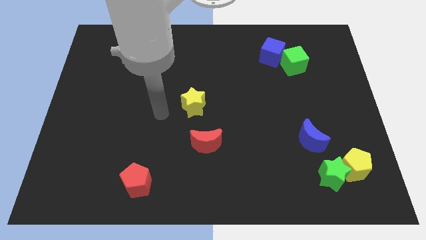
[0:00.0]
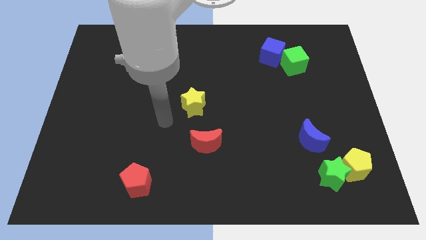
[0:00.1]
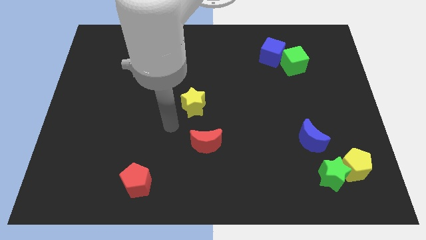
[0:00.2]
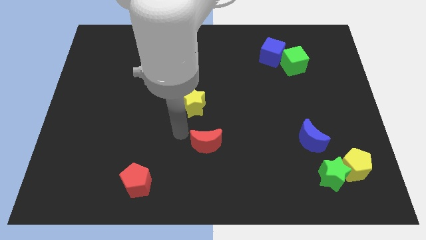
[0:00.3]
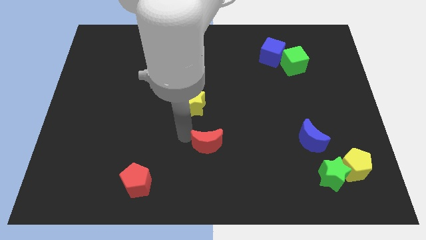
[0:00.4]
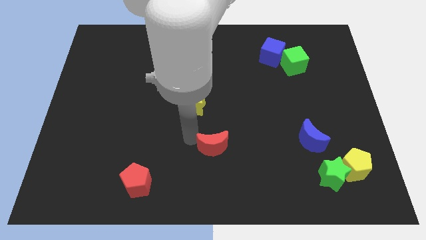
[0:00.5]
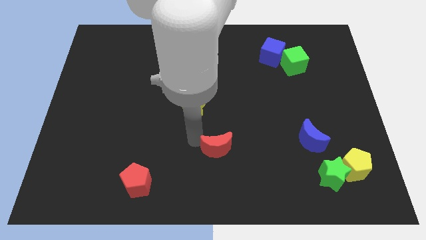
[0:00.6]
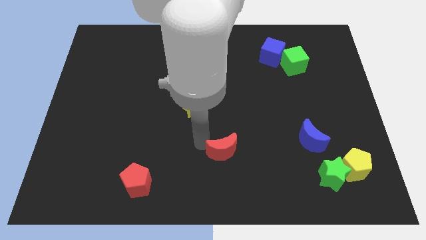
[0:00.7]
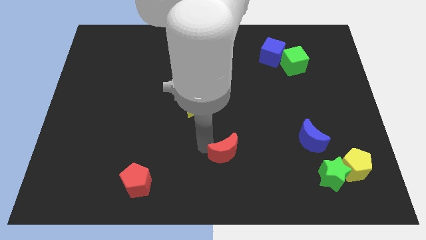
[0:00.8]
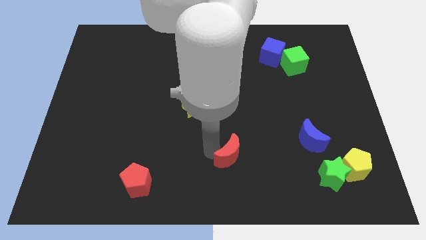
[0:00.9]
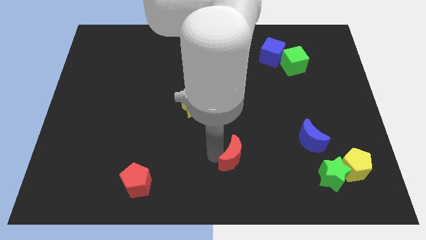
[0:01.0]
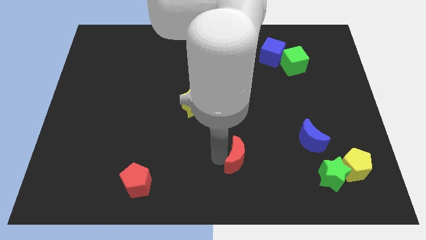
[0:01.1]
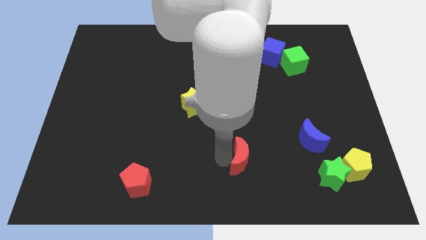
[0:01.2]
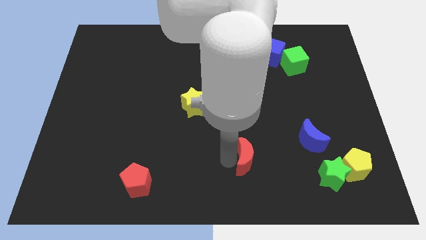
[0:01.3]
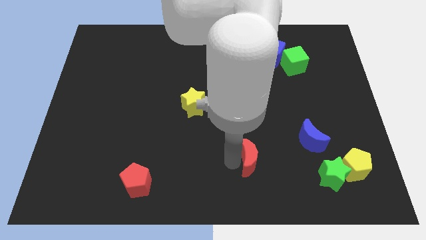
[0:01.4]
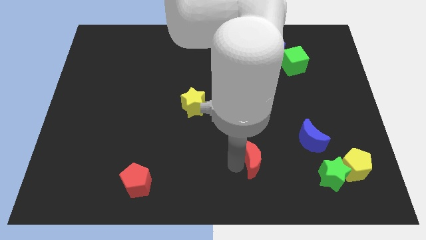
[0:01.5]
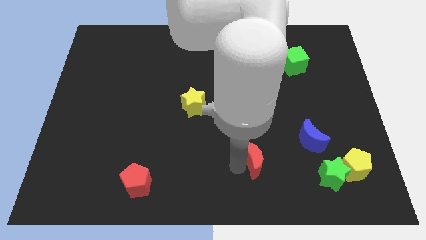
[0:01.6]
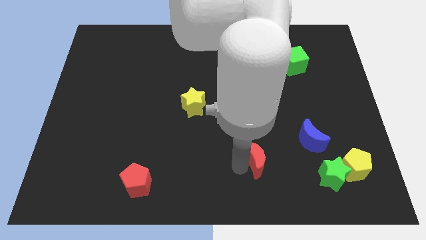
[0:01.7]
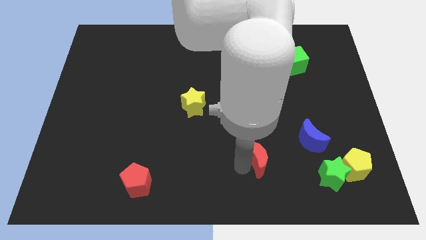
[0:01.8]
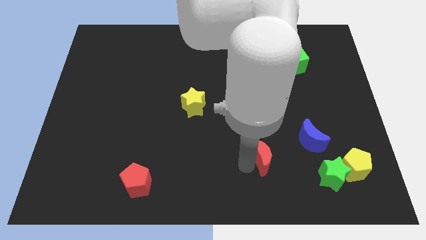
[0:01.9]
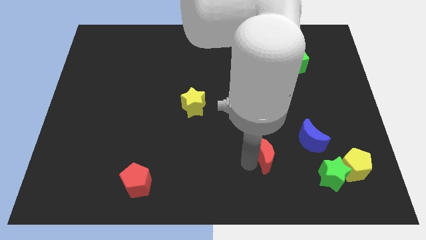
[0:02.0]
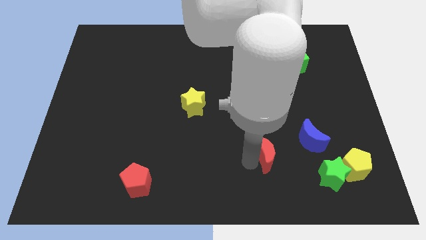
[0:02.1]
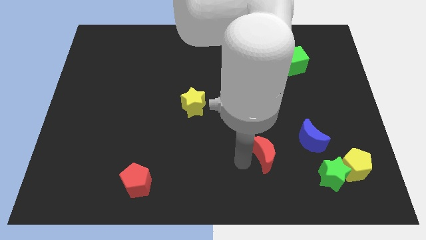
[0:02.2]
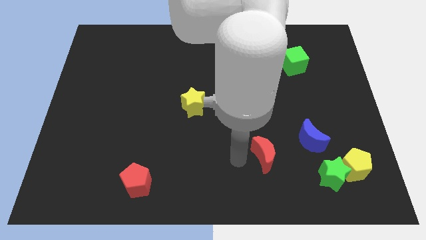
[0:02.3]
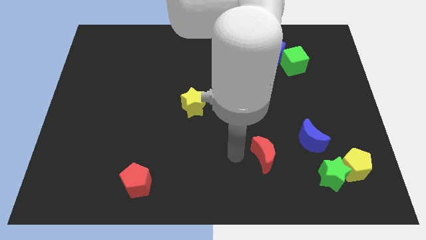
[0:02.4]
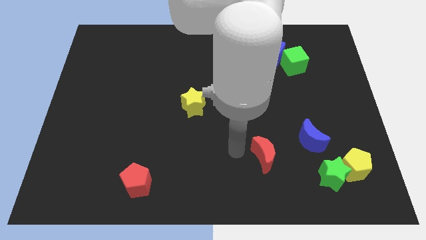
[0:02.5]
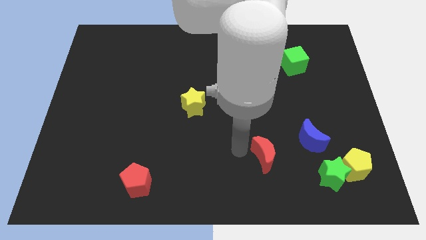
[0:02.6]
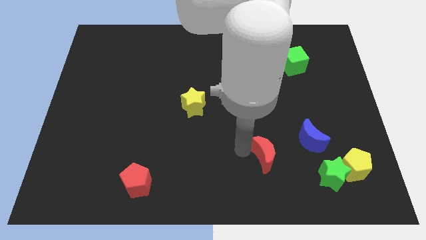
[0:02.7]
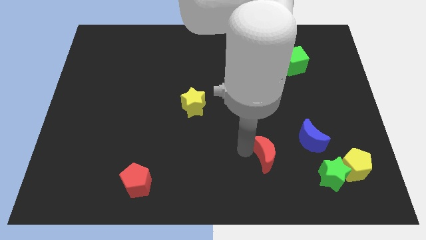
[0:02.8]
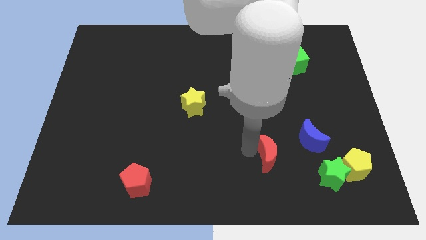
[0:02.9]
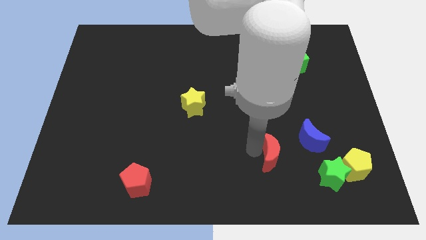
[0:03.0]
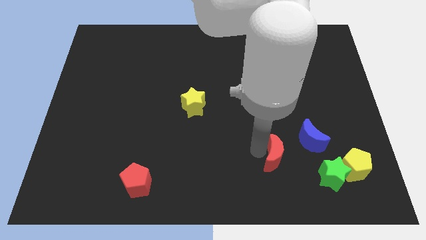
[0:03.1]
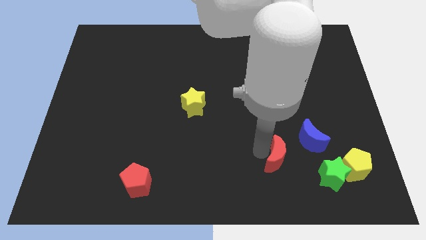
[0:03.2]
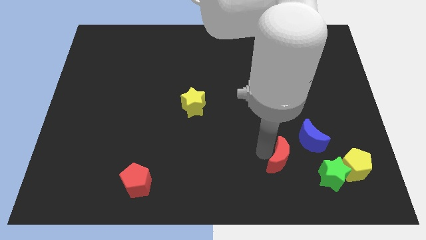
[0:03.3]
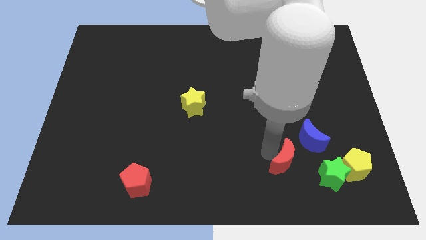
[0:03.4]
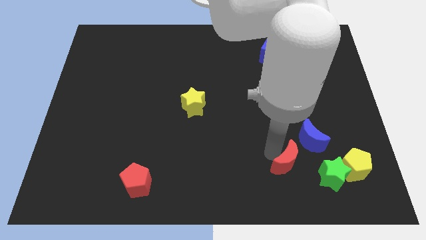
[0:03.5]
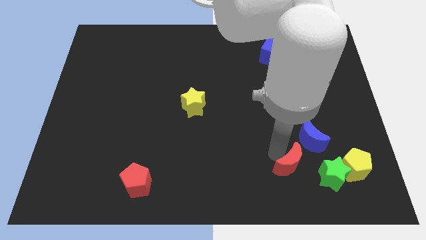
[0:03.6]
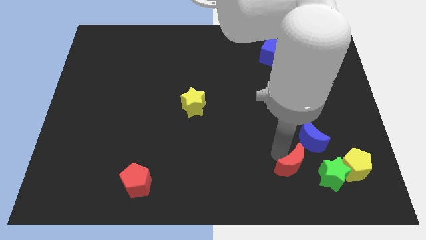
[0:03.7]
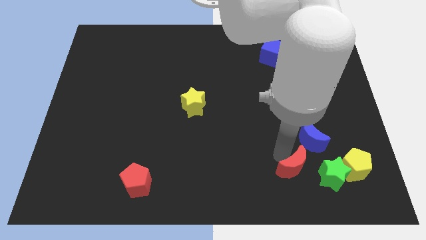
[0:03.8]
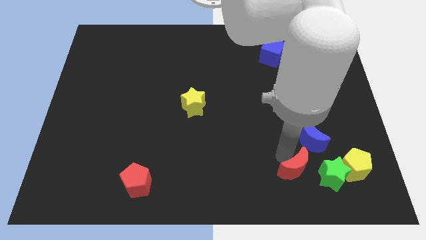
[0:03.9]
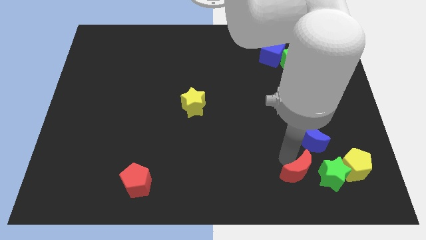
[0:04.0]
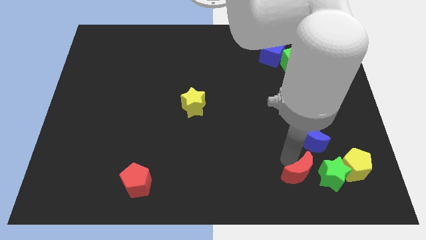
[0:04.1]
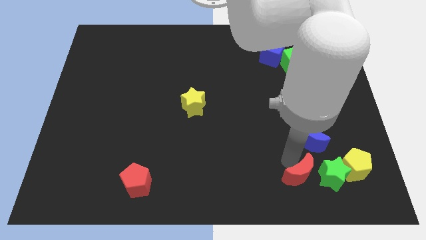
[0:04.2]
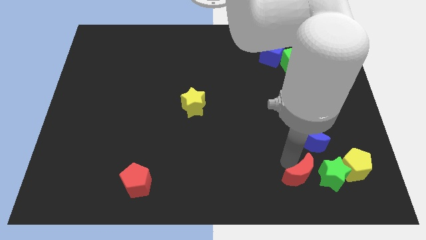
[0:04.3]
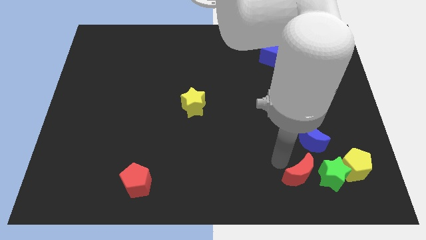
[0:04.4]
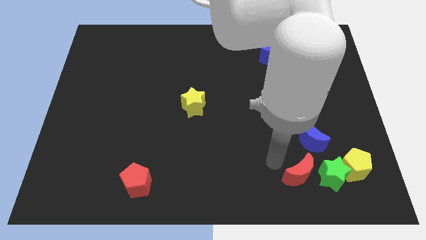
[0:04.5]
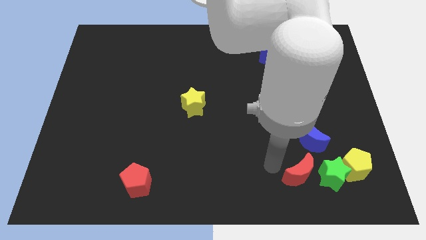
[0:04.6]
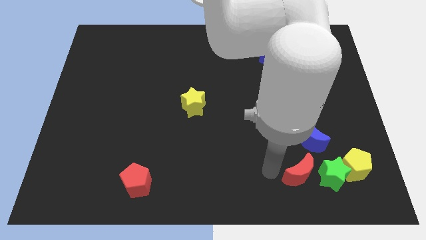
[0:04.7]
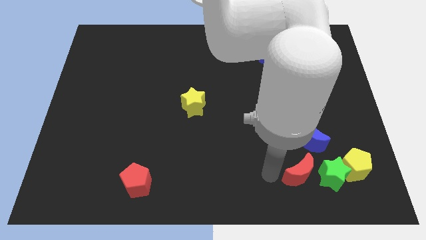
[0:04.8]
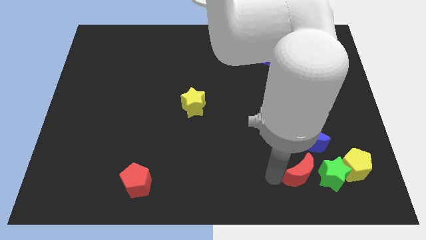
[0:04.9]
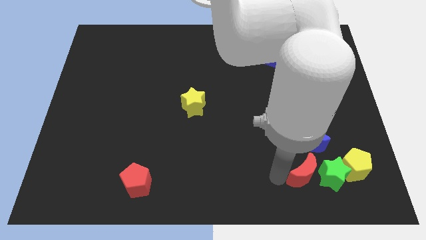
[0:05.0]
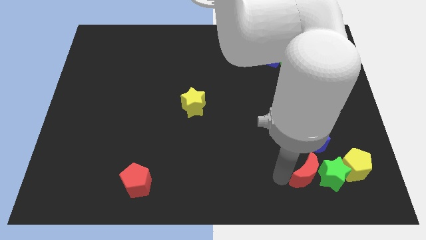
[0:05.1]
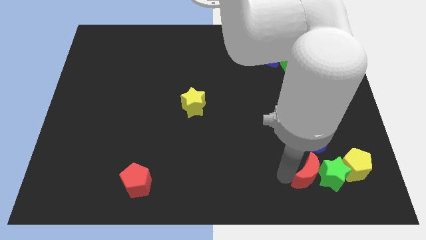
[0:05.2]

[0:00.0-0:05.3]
put the red moon towards the green star

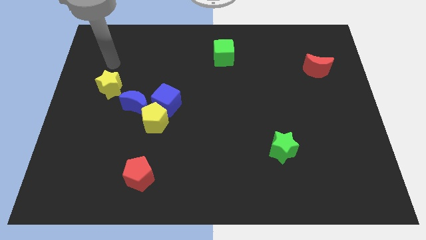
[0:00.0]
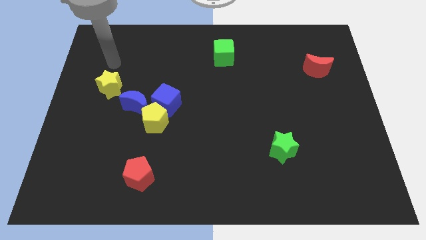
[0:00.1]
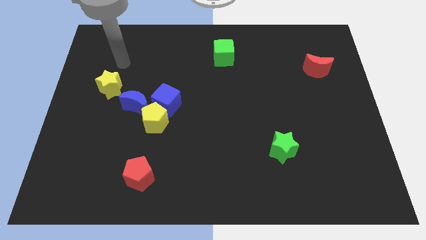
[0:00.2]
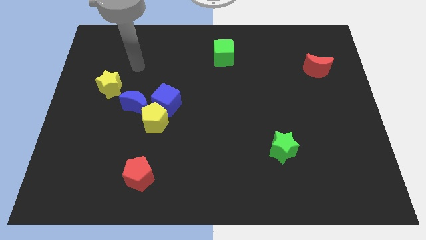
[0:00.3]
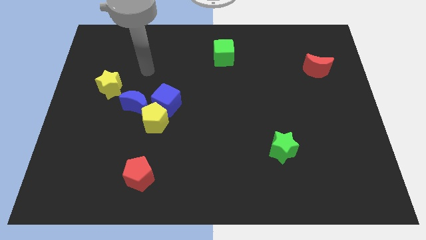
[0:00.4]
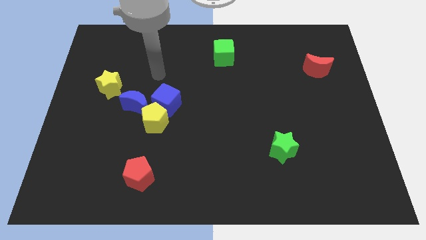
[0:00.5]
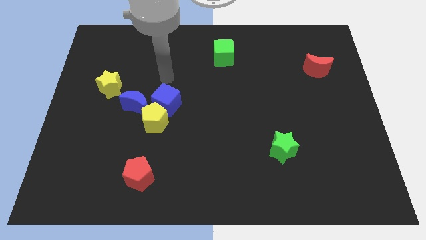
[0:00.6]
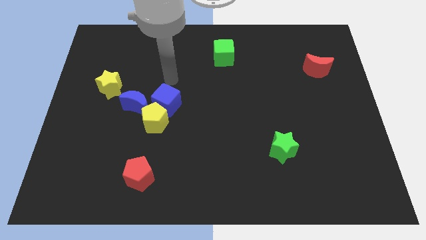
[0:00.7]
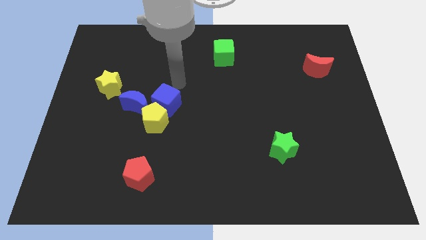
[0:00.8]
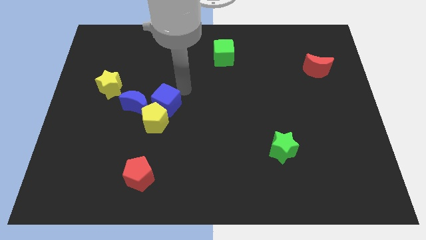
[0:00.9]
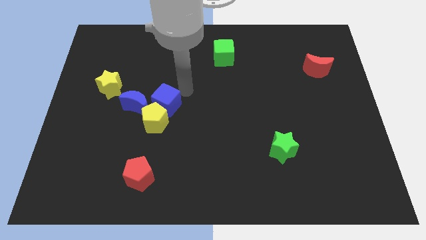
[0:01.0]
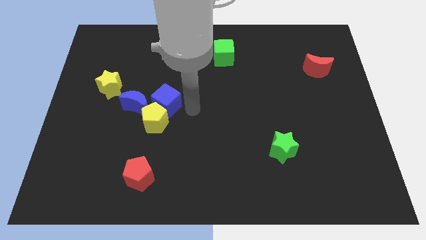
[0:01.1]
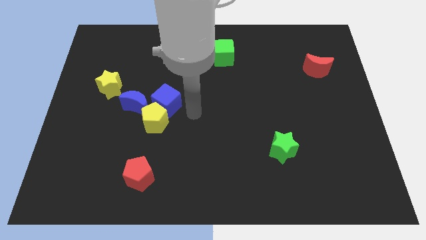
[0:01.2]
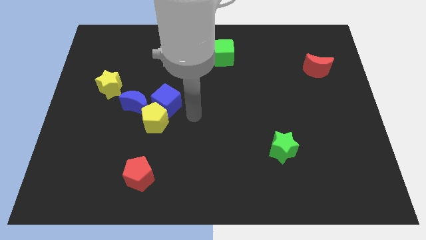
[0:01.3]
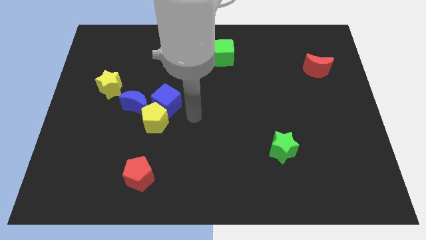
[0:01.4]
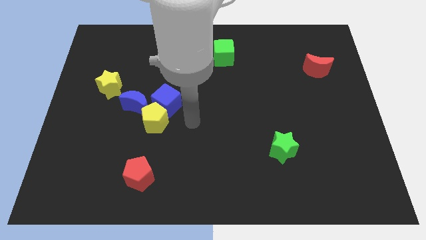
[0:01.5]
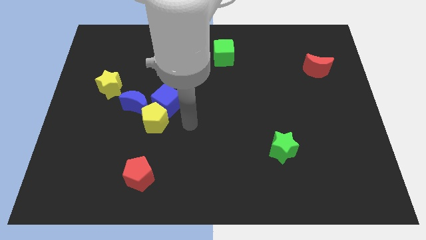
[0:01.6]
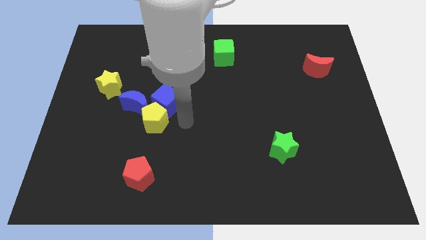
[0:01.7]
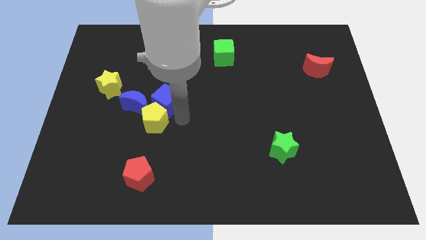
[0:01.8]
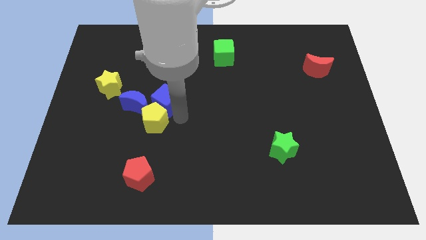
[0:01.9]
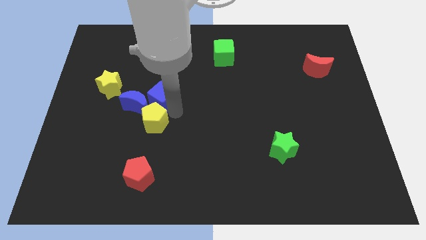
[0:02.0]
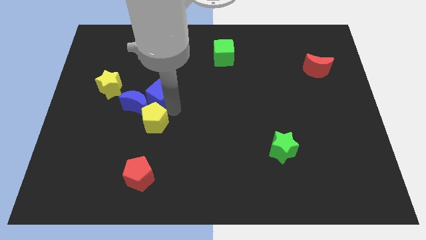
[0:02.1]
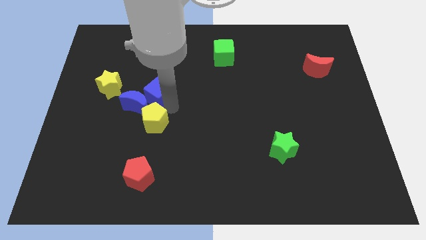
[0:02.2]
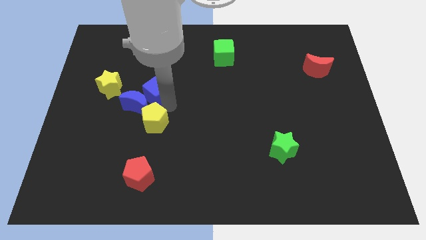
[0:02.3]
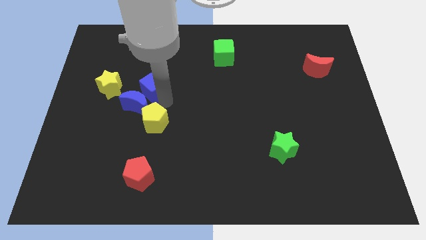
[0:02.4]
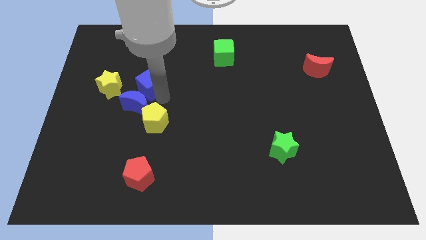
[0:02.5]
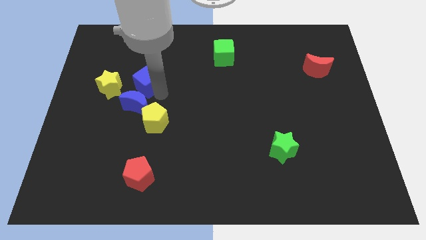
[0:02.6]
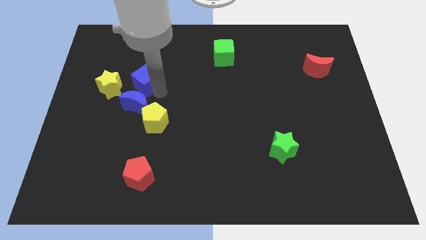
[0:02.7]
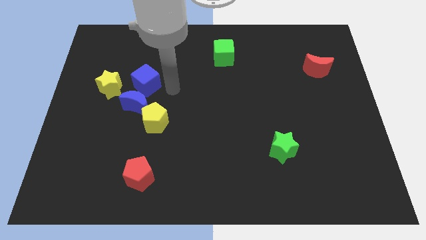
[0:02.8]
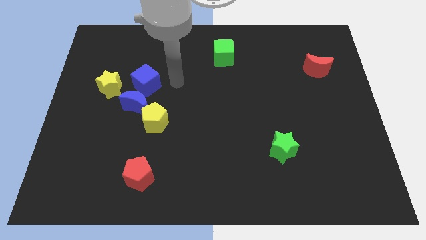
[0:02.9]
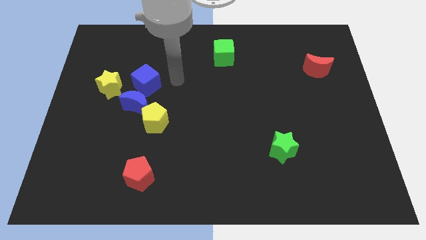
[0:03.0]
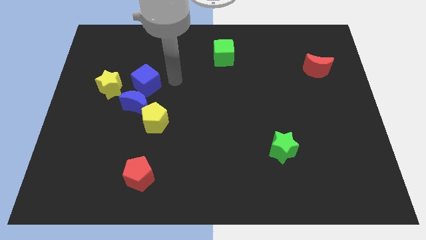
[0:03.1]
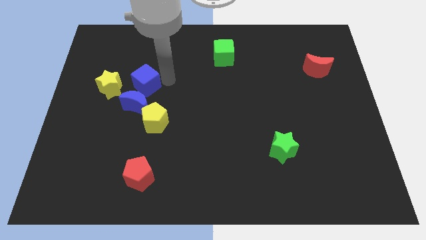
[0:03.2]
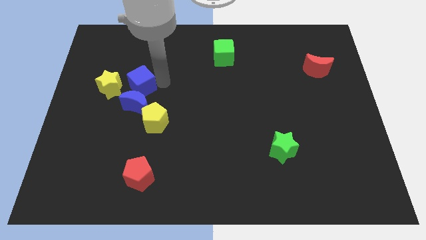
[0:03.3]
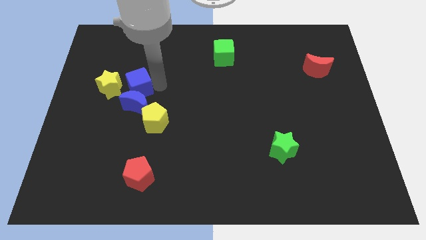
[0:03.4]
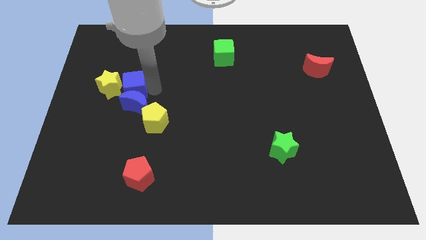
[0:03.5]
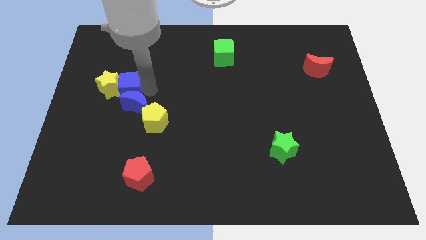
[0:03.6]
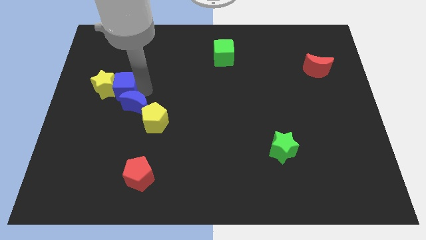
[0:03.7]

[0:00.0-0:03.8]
slide the blue cube next to the yellow star
